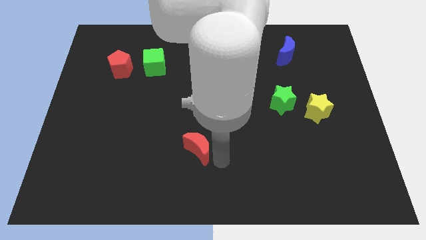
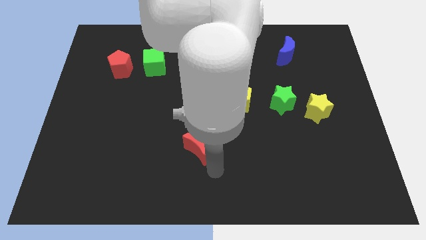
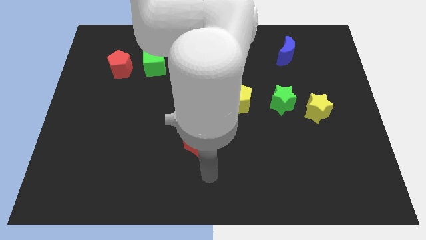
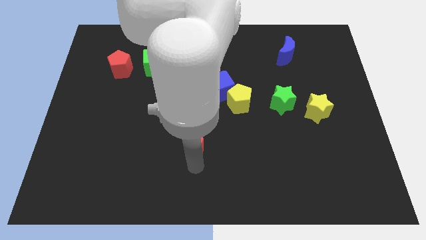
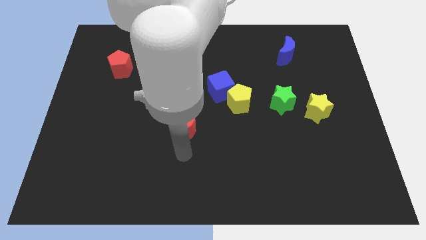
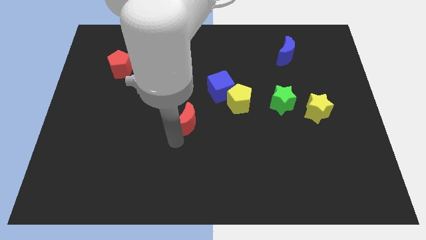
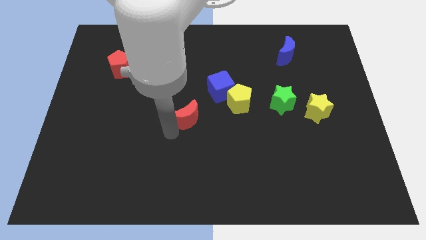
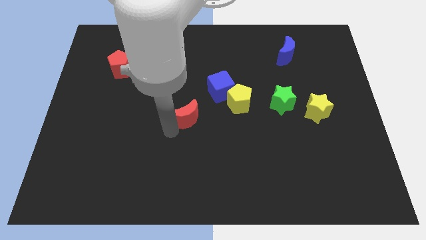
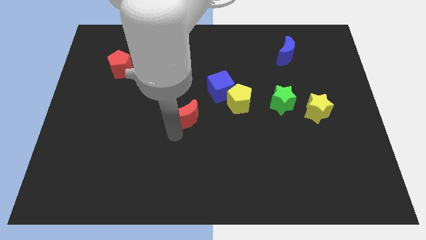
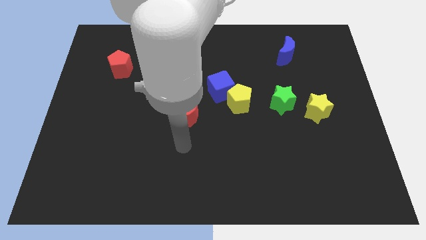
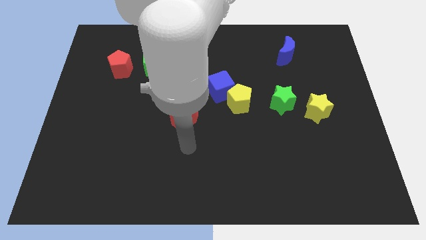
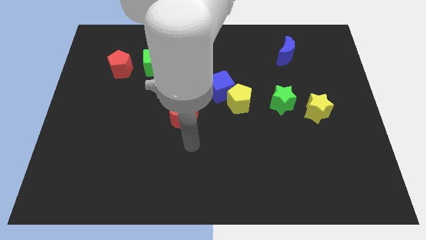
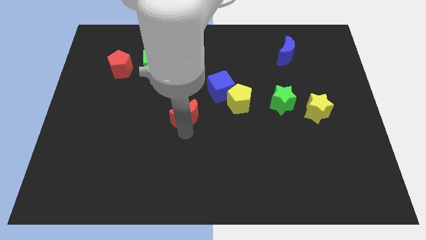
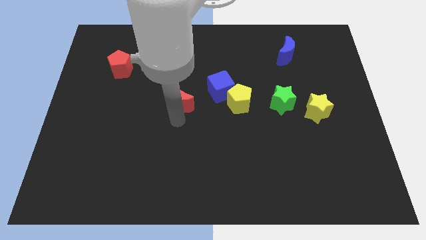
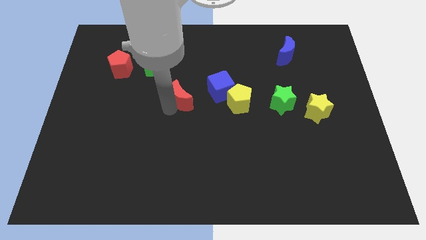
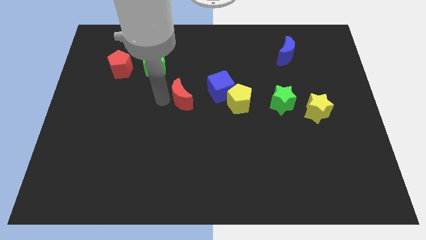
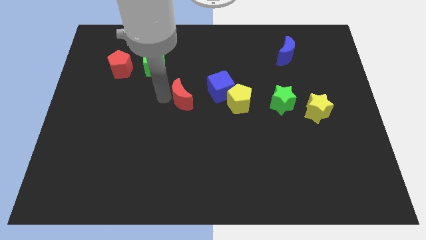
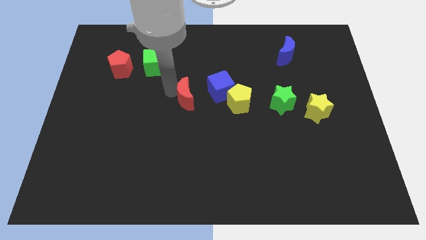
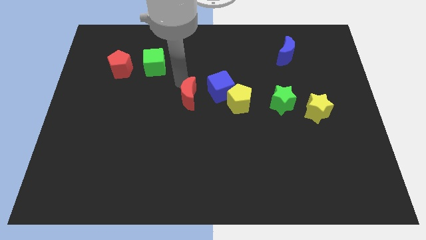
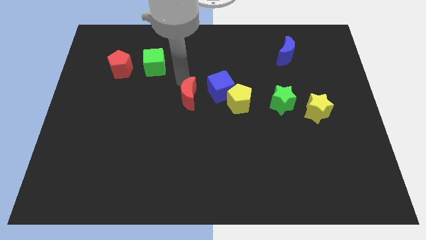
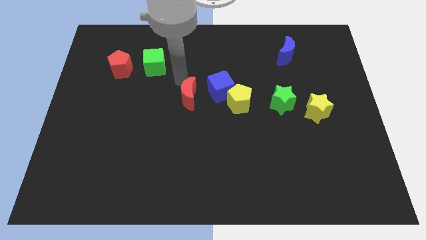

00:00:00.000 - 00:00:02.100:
place red moon to the left of blue cube

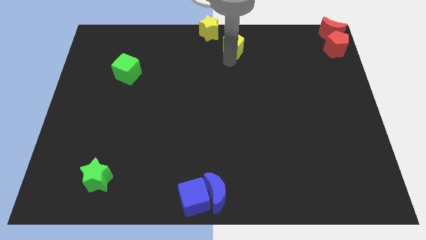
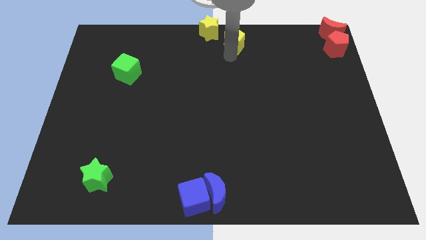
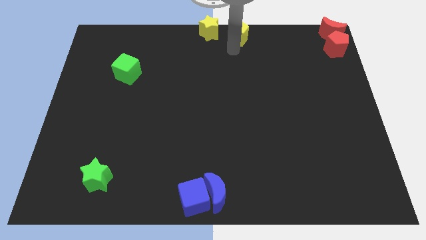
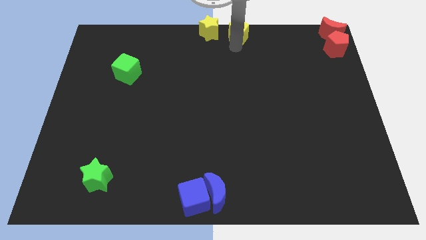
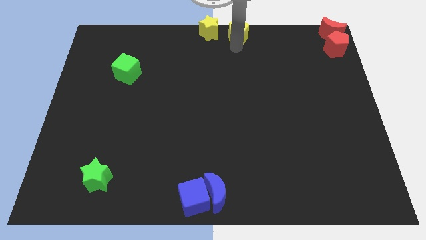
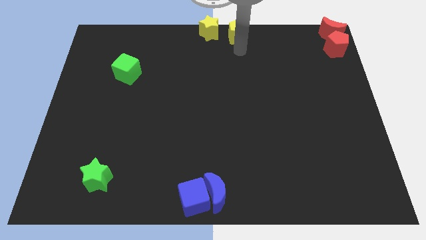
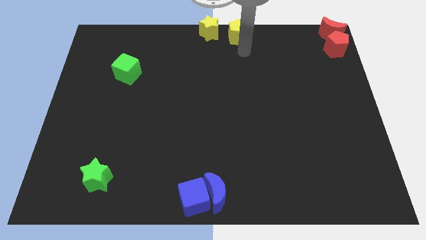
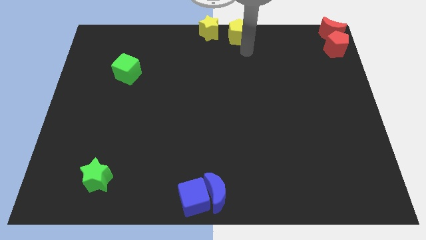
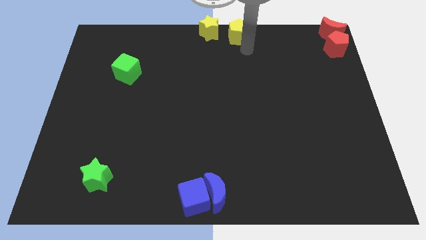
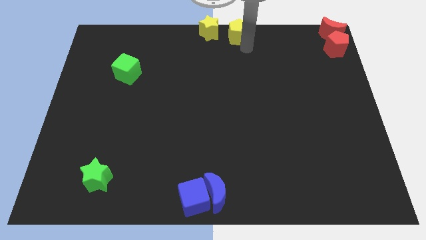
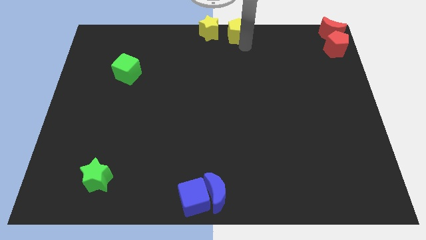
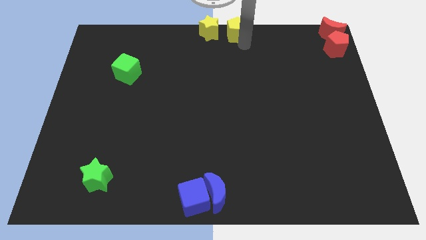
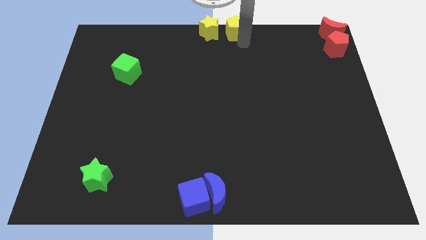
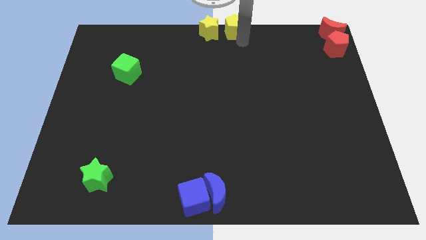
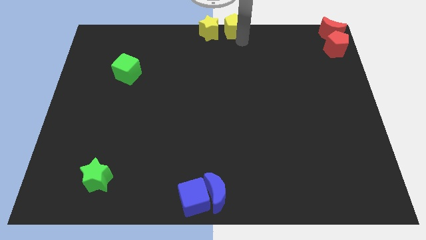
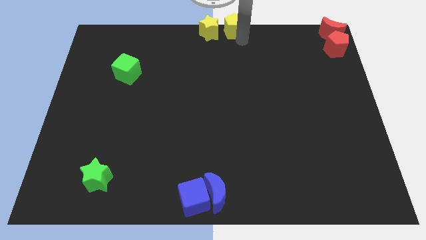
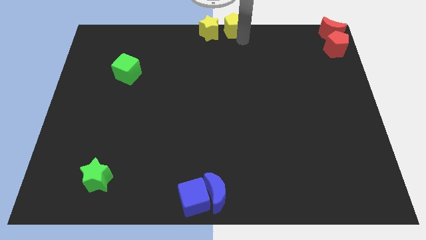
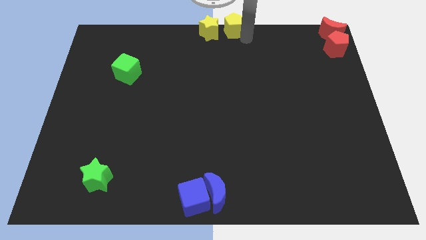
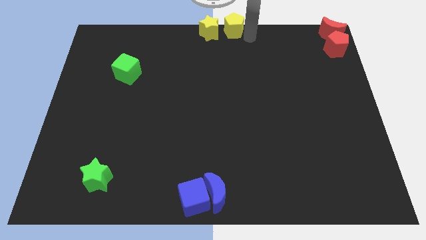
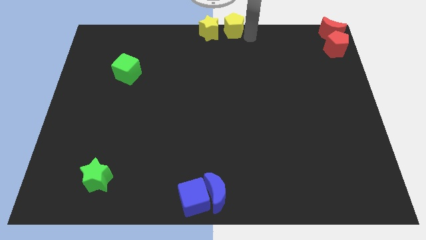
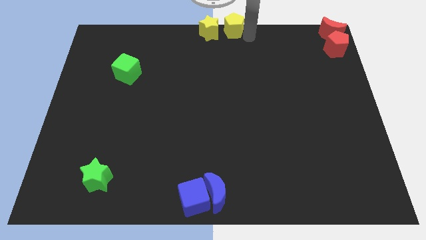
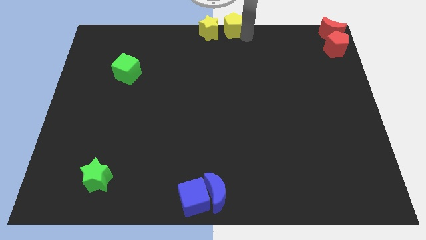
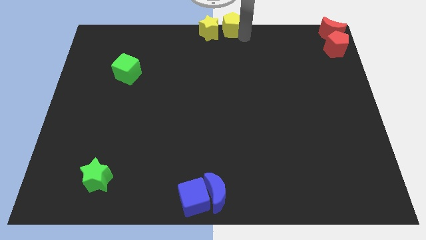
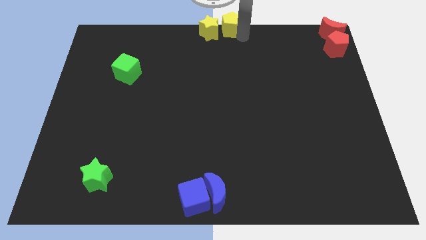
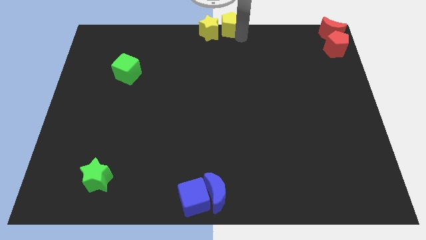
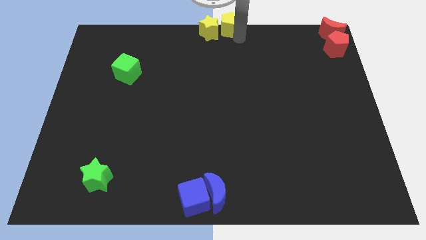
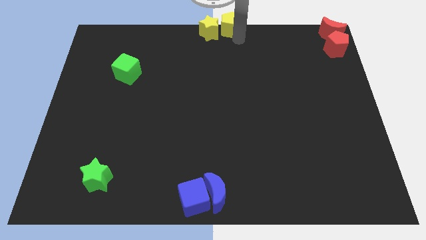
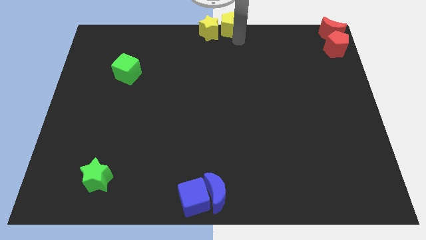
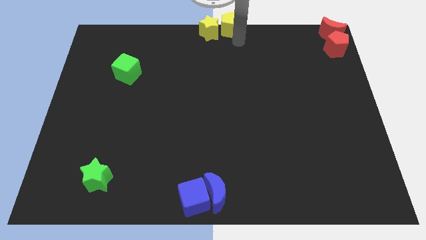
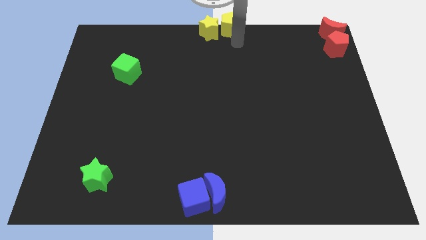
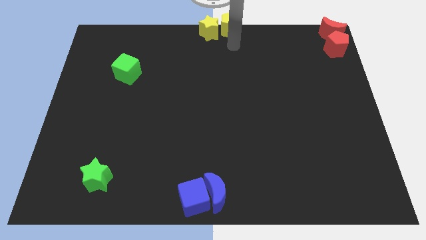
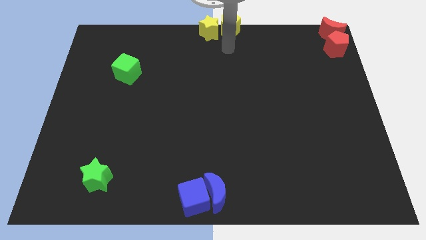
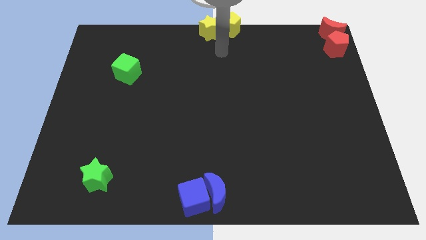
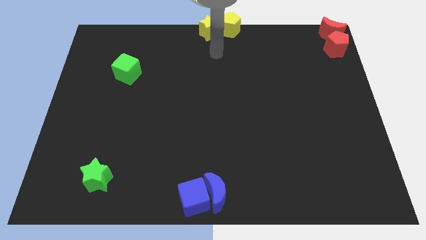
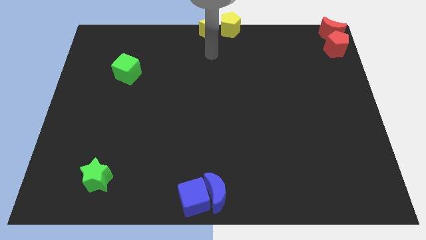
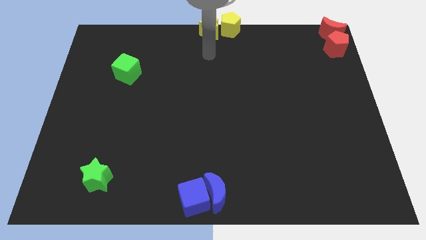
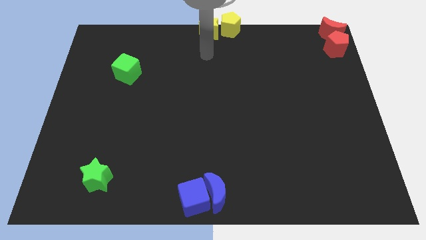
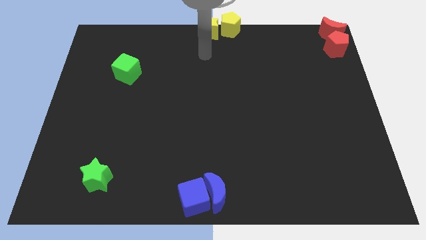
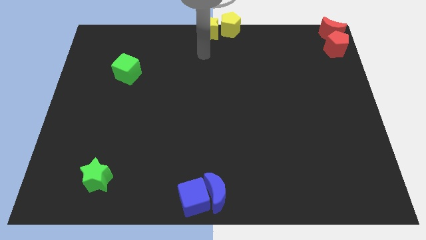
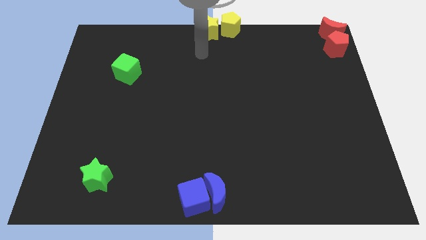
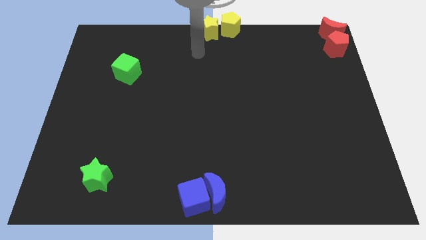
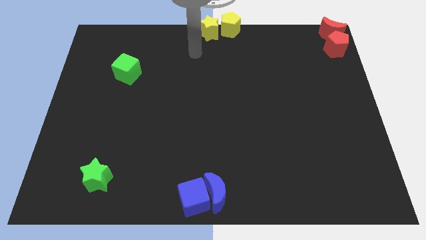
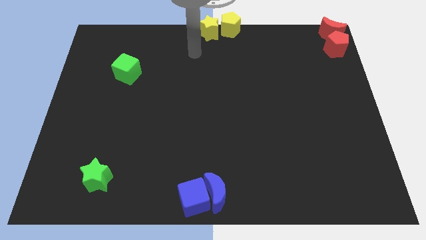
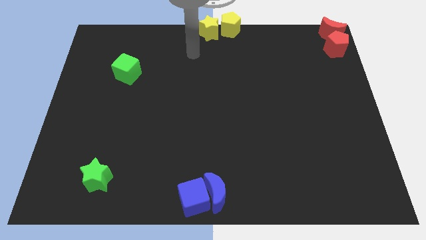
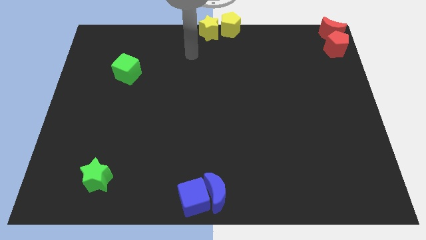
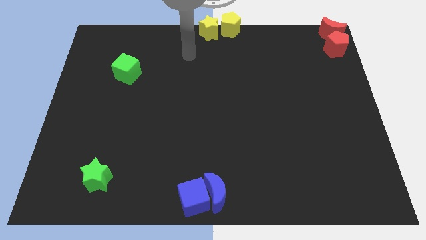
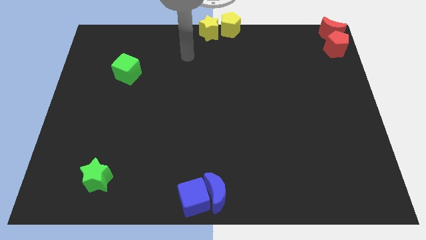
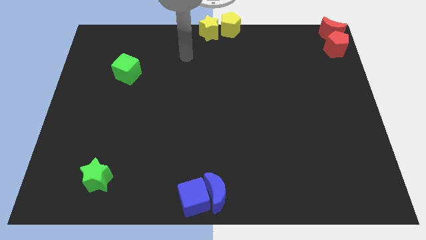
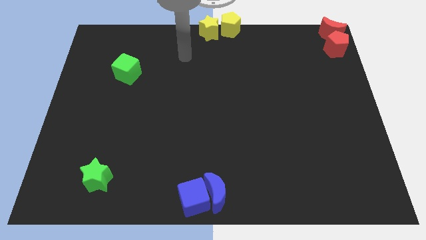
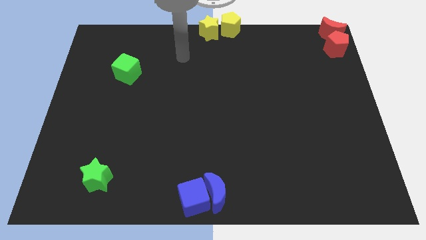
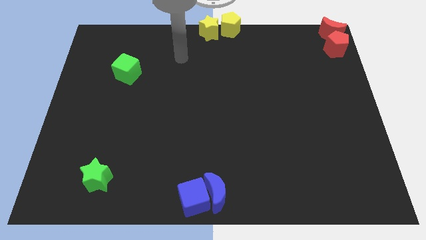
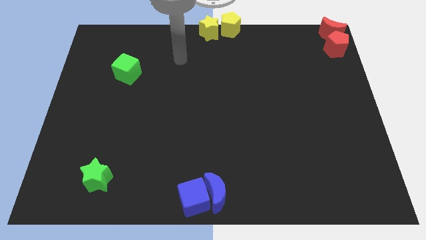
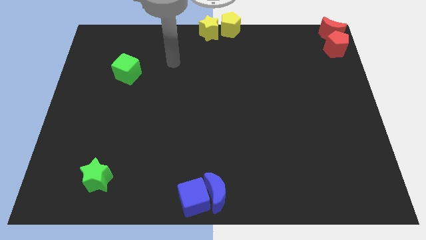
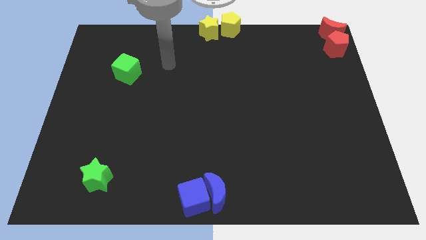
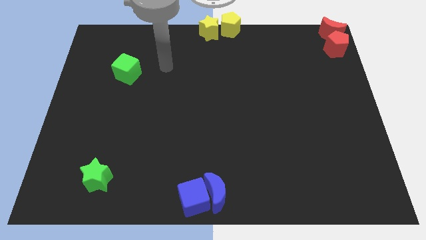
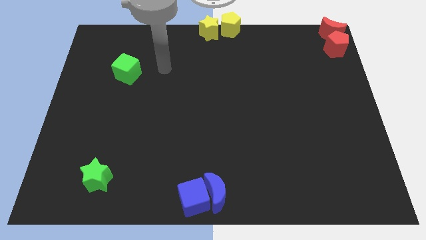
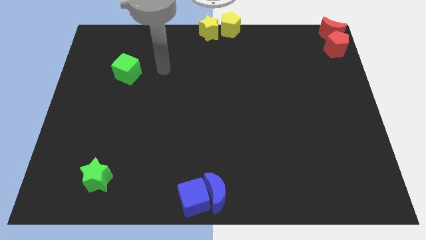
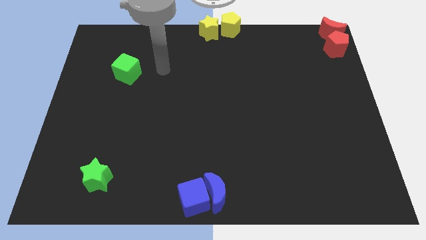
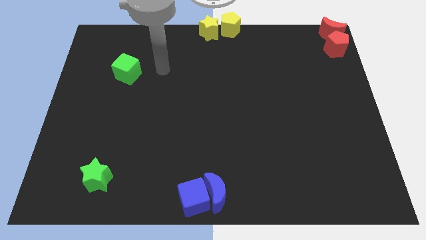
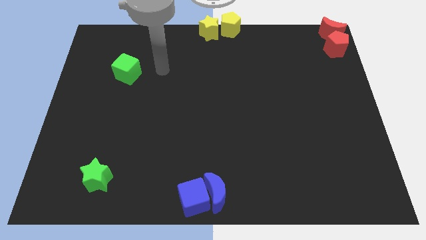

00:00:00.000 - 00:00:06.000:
place the yellow pentagon to the right side of the yellow star

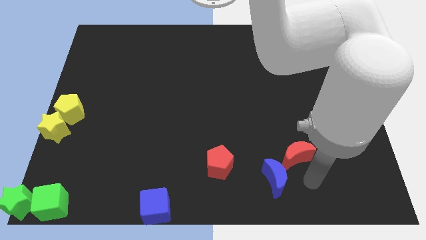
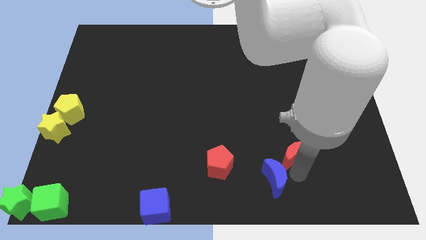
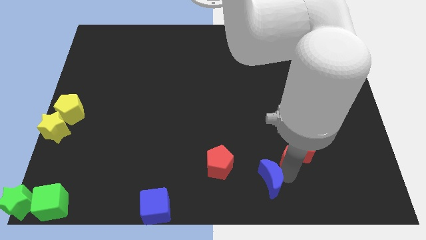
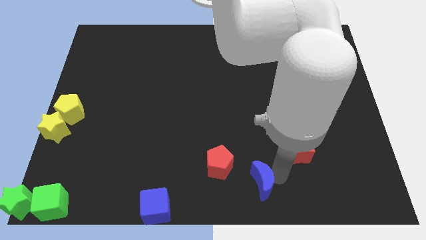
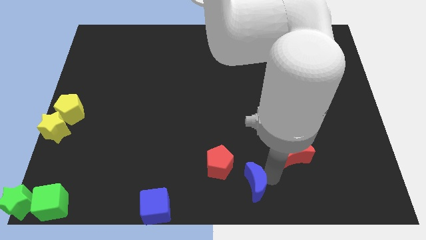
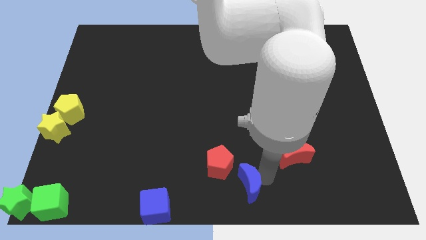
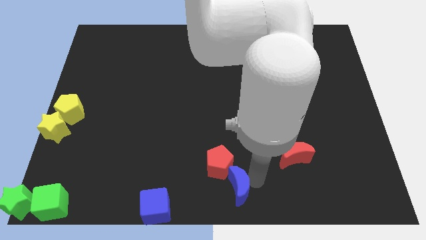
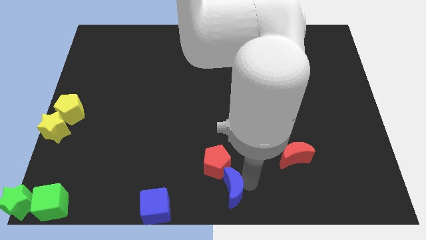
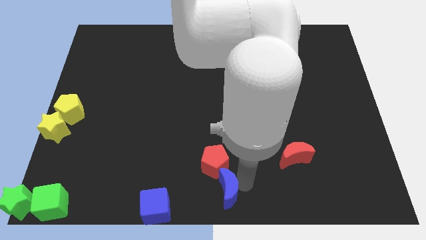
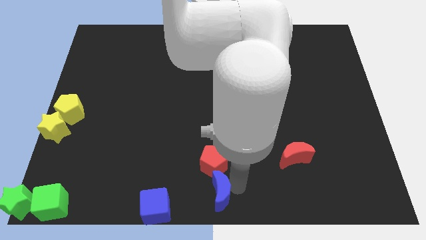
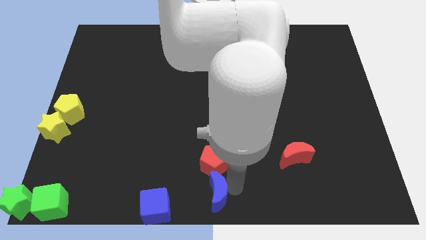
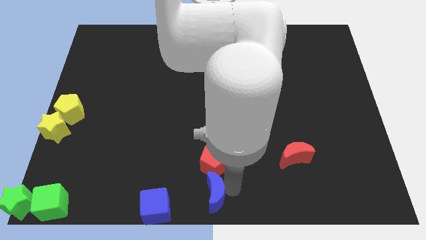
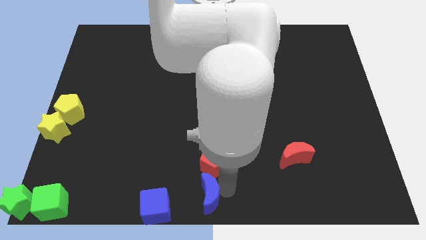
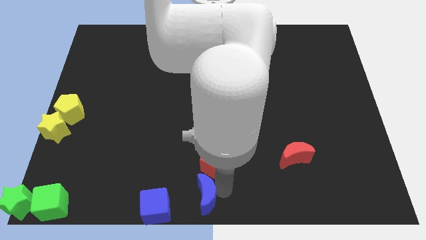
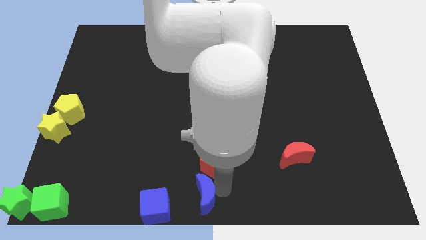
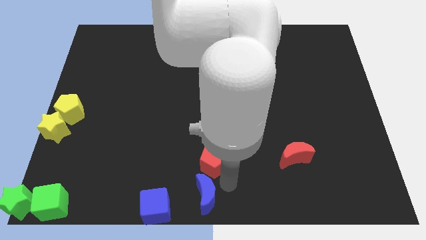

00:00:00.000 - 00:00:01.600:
move the blue crescent towards the blue cube
